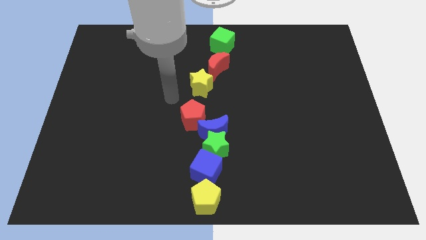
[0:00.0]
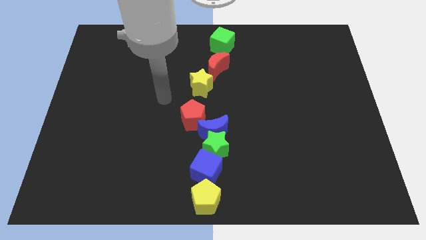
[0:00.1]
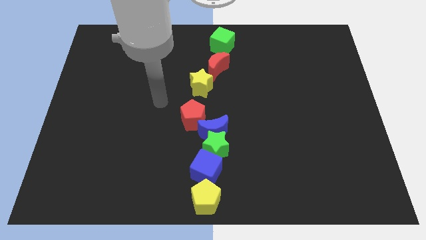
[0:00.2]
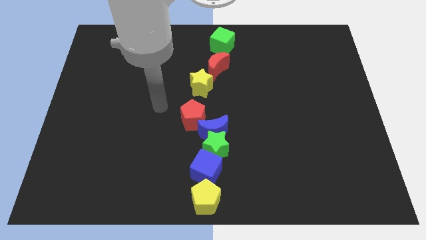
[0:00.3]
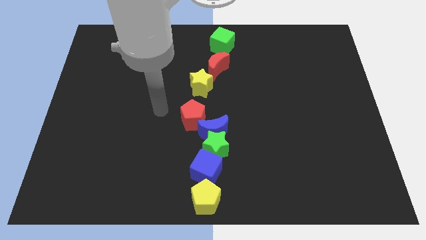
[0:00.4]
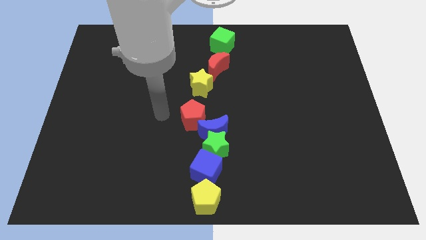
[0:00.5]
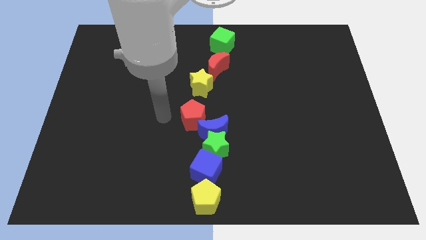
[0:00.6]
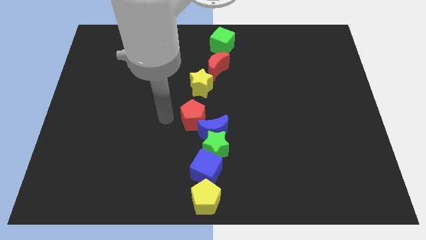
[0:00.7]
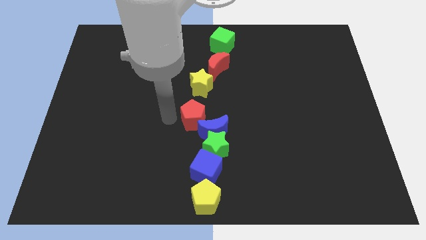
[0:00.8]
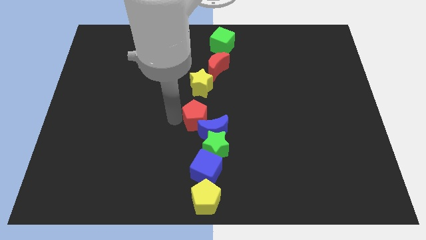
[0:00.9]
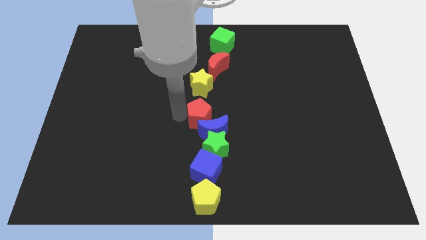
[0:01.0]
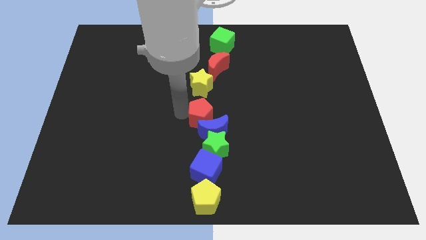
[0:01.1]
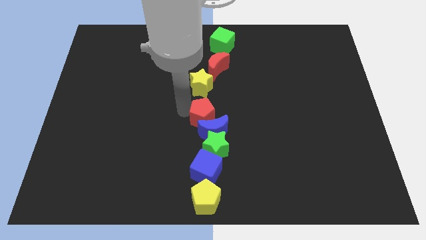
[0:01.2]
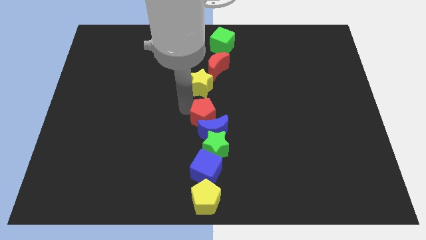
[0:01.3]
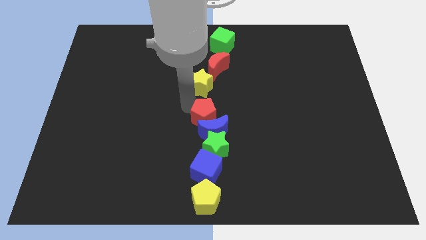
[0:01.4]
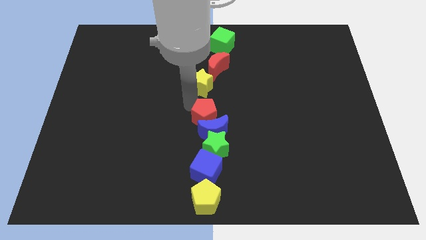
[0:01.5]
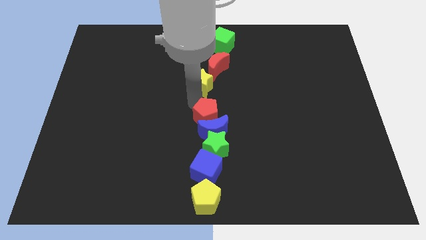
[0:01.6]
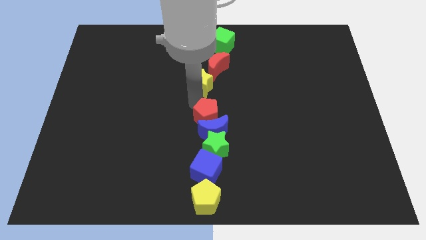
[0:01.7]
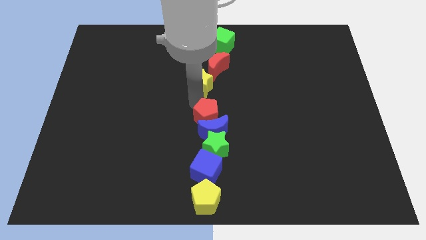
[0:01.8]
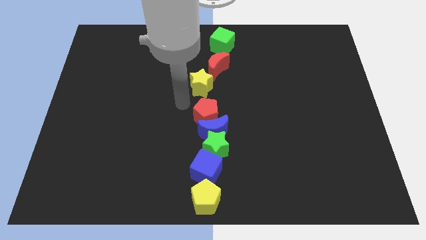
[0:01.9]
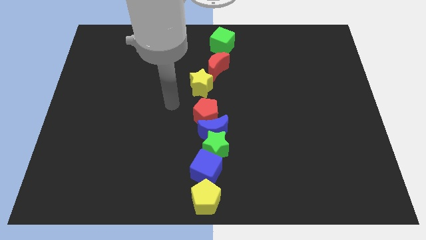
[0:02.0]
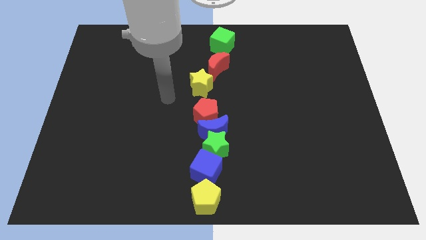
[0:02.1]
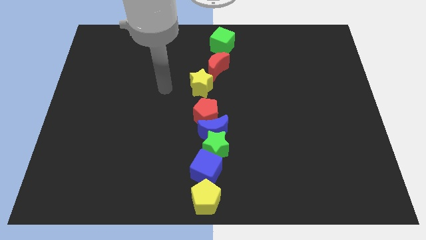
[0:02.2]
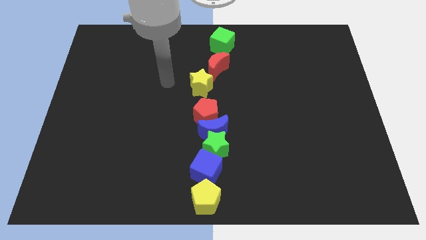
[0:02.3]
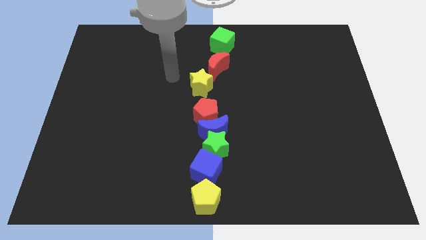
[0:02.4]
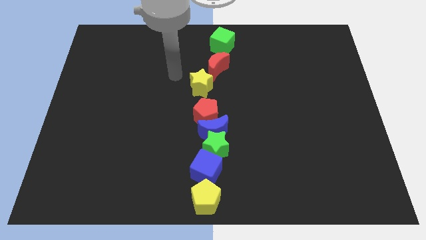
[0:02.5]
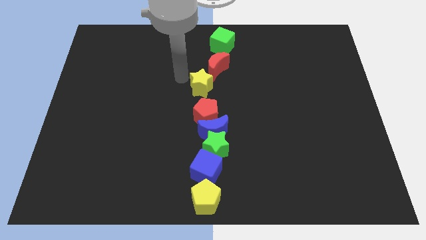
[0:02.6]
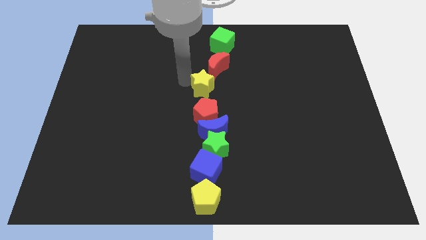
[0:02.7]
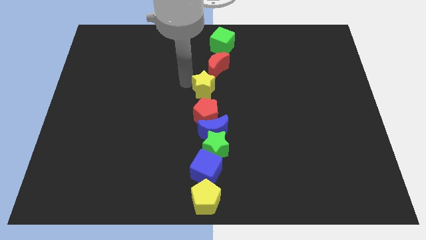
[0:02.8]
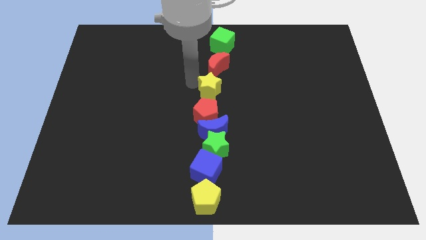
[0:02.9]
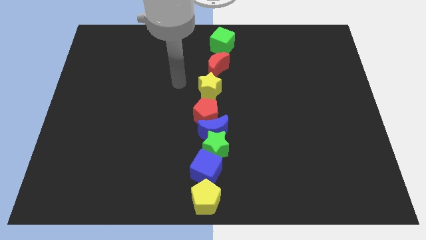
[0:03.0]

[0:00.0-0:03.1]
place yellow star between red moon and red pentagon

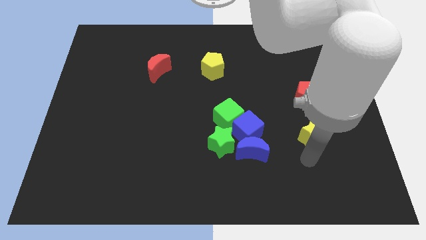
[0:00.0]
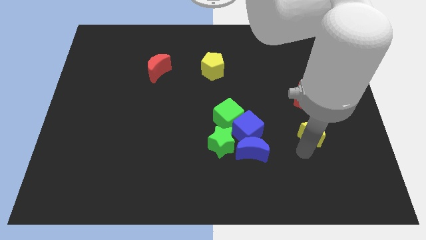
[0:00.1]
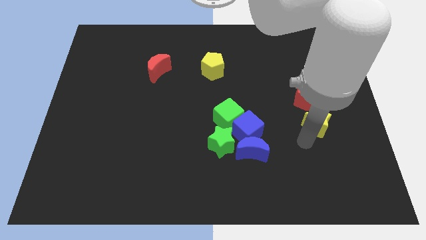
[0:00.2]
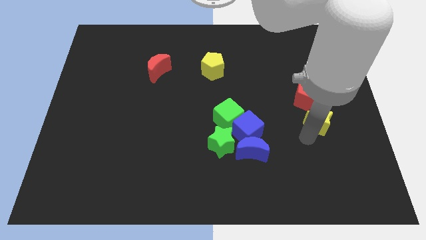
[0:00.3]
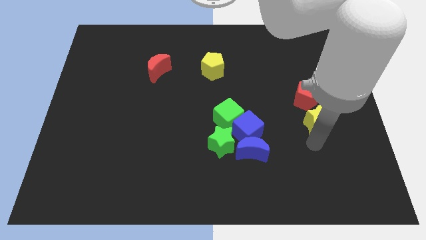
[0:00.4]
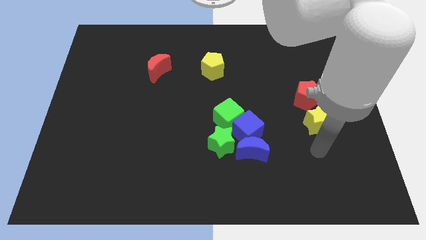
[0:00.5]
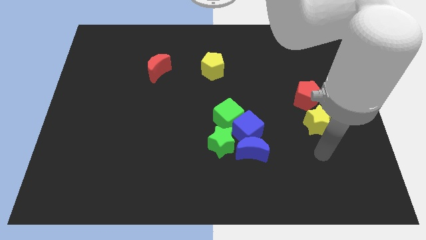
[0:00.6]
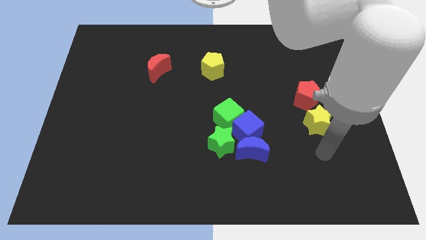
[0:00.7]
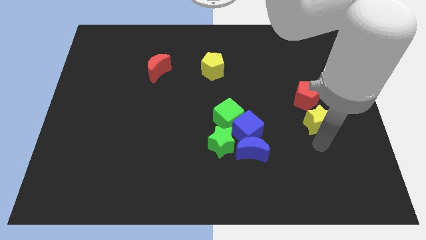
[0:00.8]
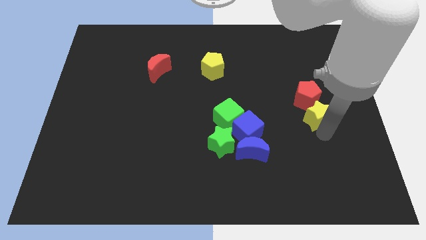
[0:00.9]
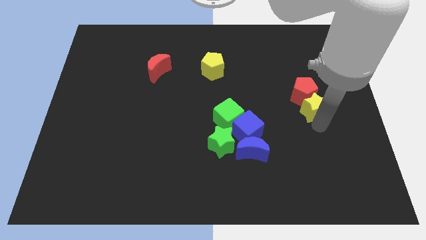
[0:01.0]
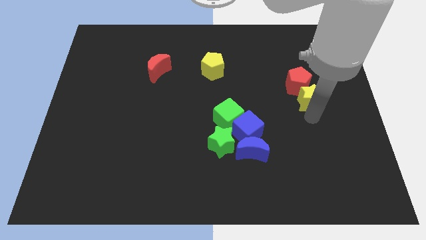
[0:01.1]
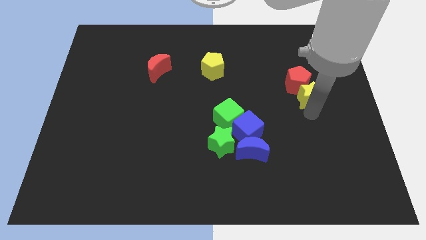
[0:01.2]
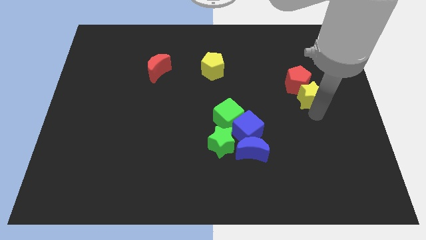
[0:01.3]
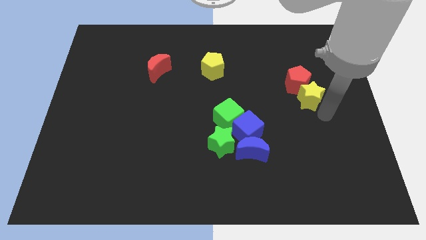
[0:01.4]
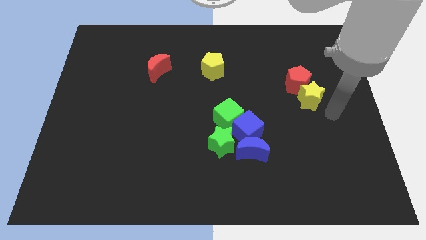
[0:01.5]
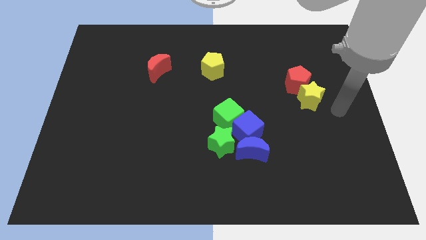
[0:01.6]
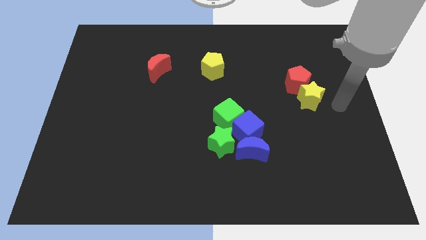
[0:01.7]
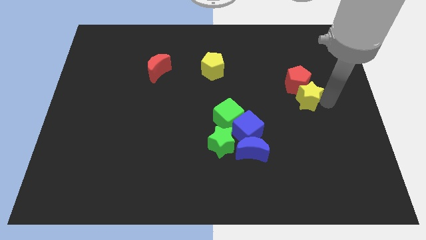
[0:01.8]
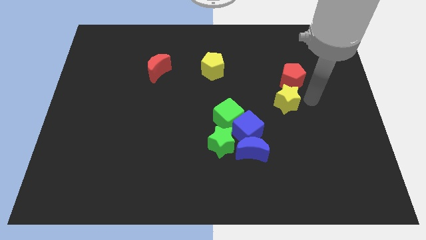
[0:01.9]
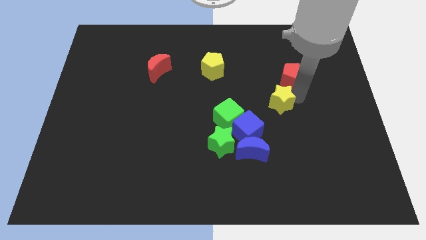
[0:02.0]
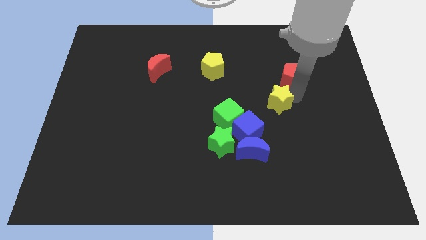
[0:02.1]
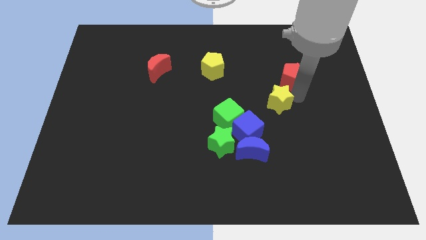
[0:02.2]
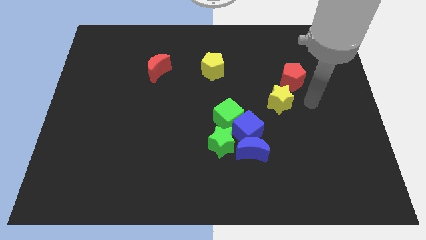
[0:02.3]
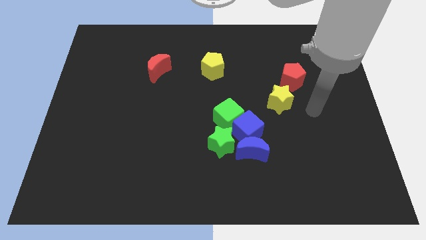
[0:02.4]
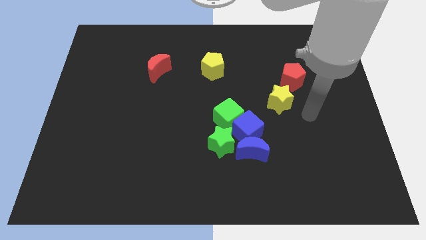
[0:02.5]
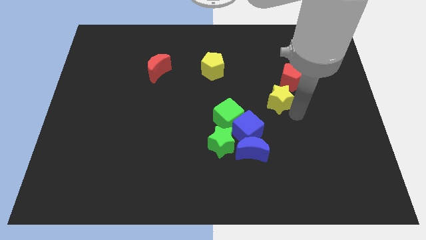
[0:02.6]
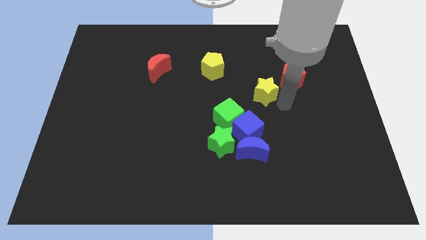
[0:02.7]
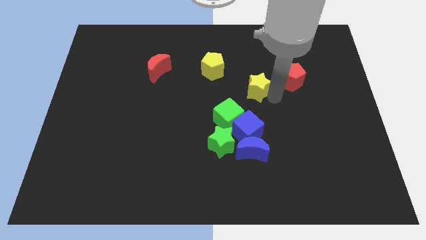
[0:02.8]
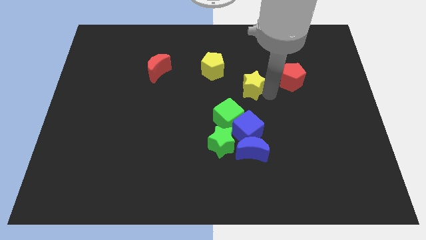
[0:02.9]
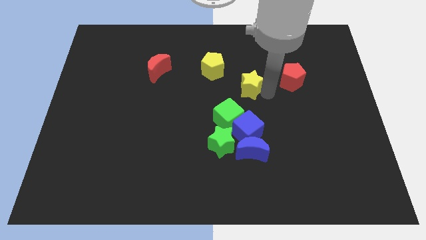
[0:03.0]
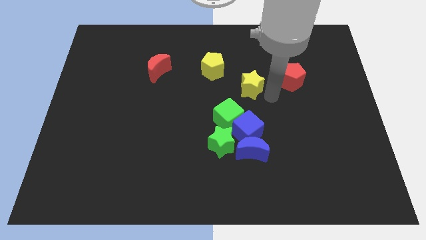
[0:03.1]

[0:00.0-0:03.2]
place the yellow star to the left of the red pentagon

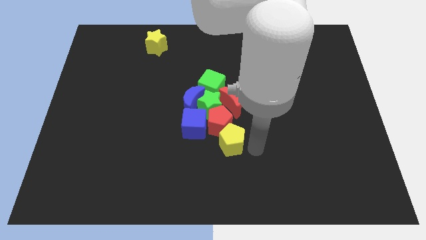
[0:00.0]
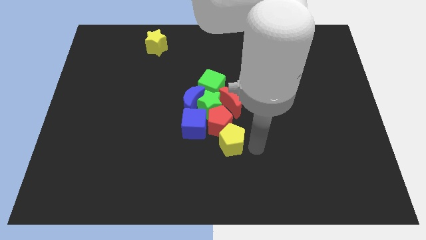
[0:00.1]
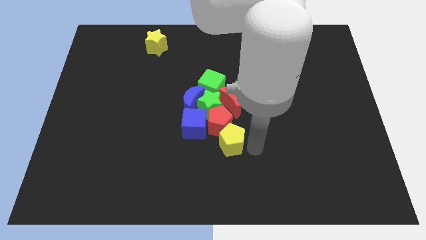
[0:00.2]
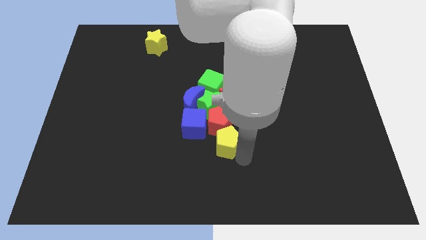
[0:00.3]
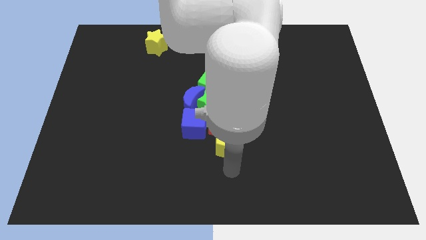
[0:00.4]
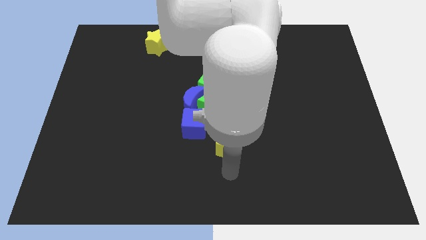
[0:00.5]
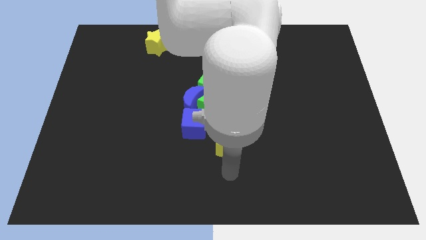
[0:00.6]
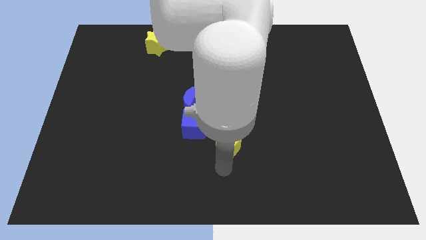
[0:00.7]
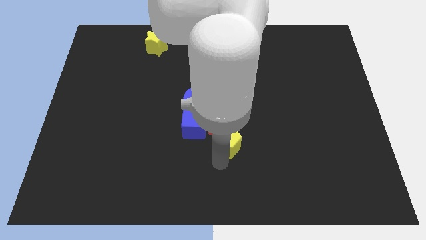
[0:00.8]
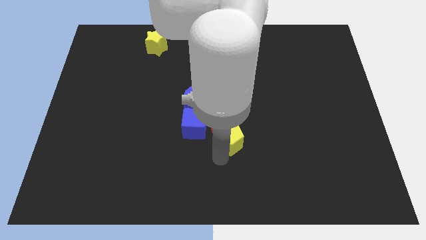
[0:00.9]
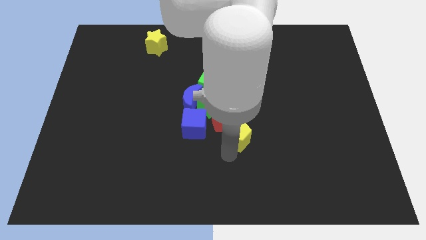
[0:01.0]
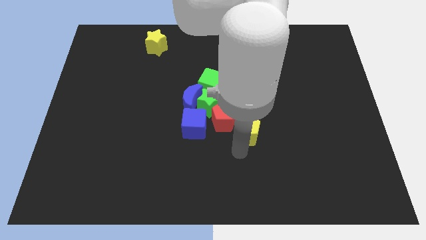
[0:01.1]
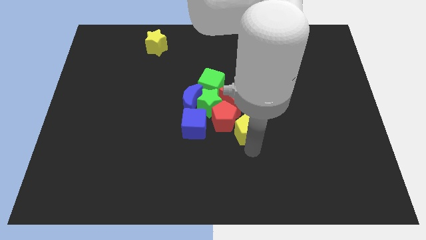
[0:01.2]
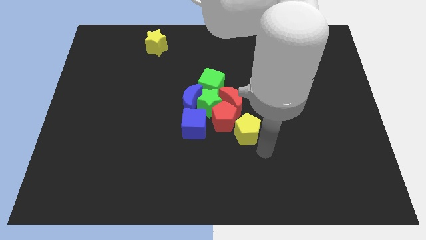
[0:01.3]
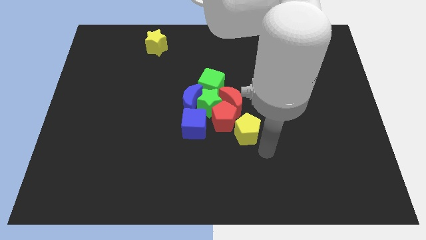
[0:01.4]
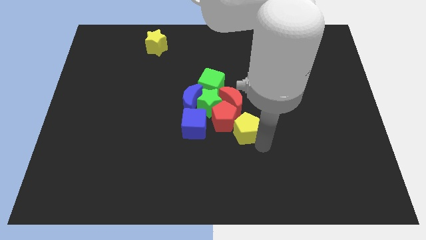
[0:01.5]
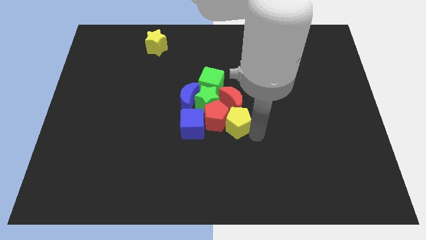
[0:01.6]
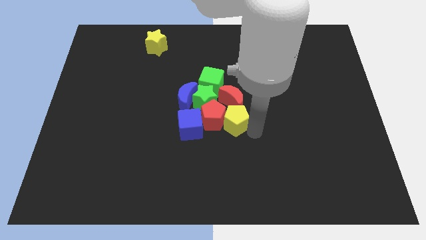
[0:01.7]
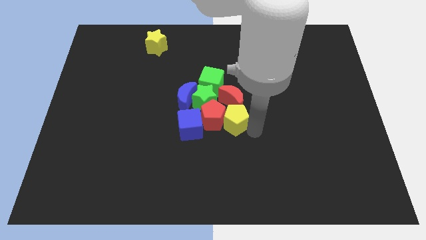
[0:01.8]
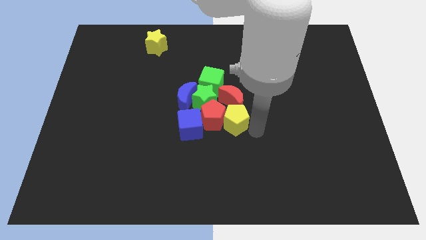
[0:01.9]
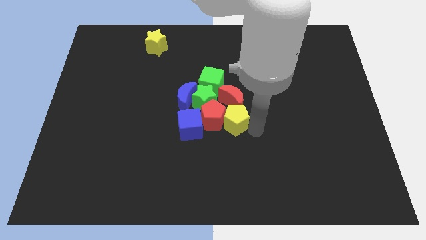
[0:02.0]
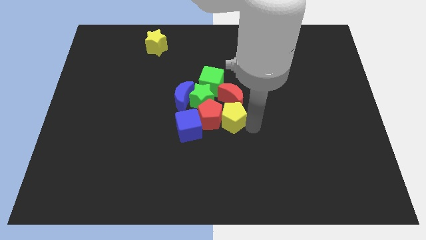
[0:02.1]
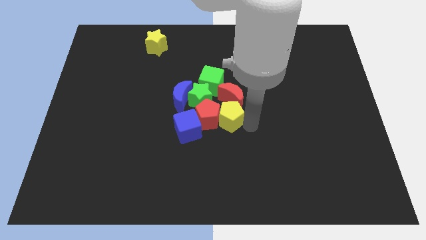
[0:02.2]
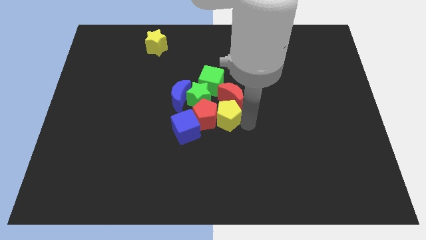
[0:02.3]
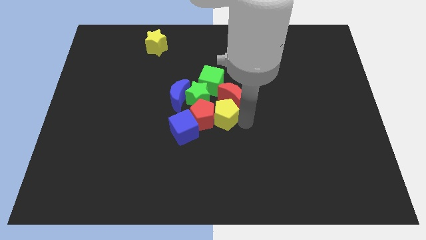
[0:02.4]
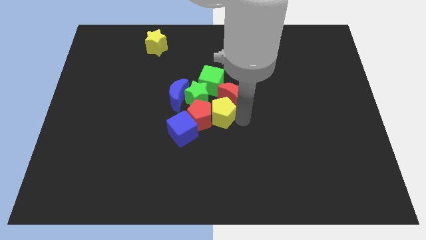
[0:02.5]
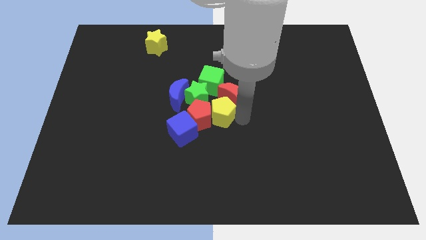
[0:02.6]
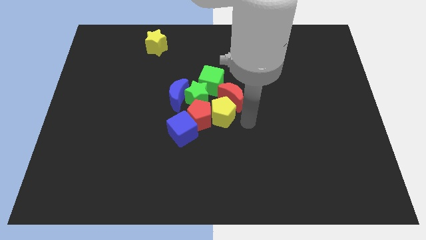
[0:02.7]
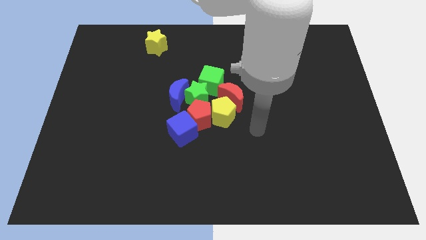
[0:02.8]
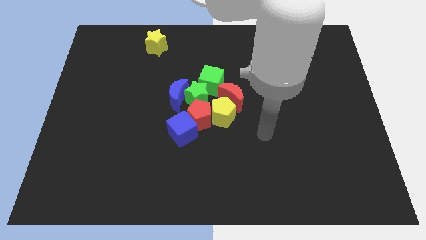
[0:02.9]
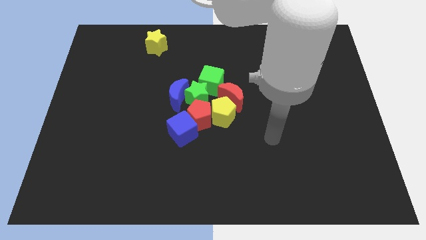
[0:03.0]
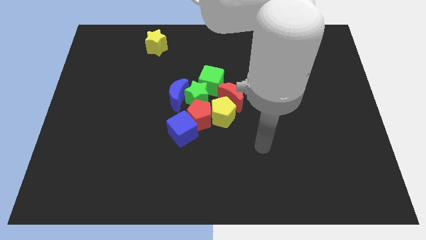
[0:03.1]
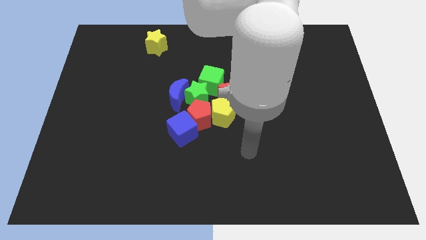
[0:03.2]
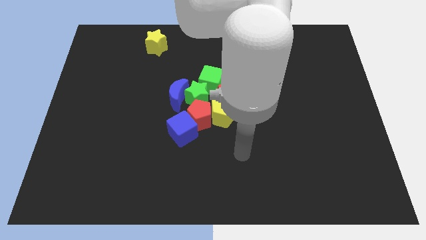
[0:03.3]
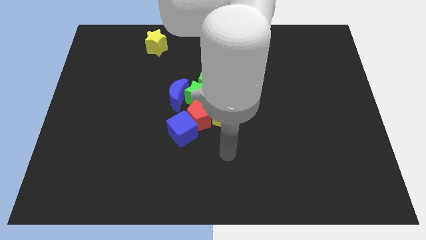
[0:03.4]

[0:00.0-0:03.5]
move the yellow pentagon right beside the red pentagon
